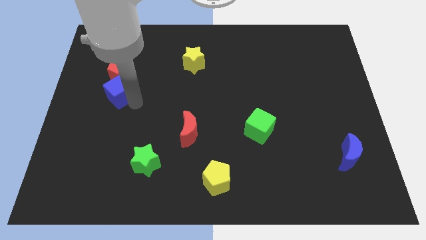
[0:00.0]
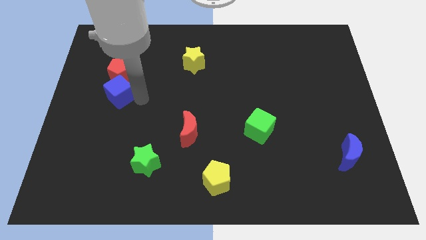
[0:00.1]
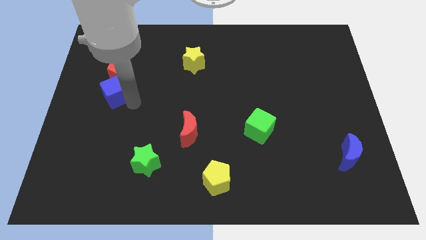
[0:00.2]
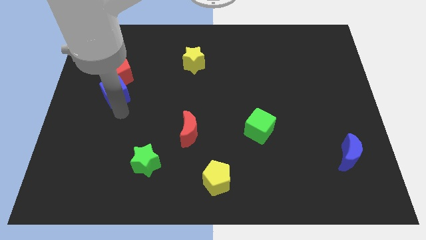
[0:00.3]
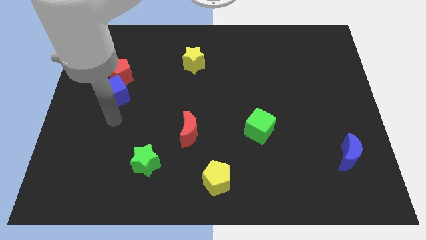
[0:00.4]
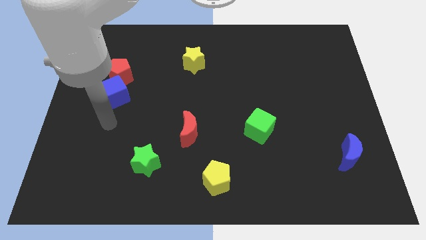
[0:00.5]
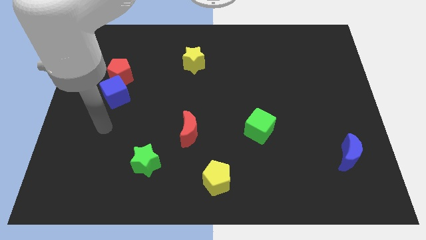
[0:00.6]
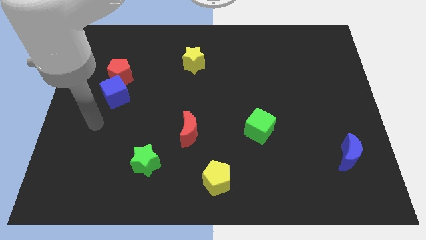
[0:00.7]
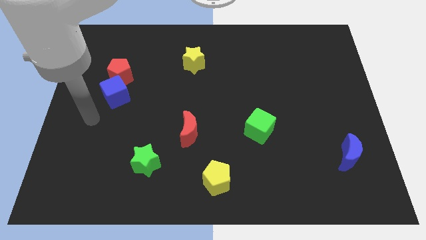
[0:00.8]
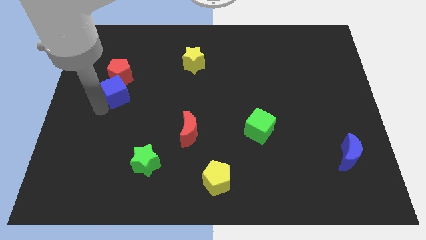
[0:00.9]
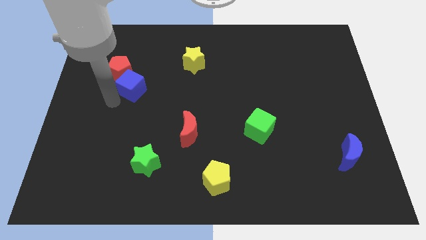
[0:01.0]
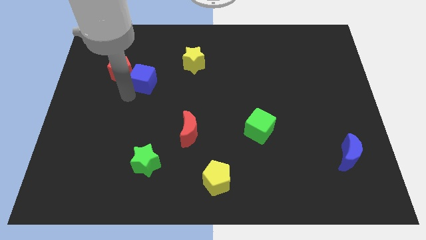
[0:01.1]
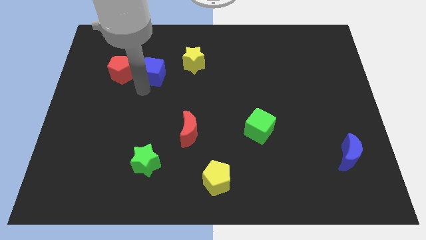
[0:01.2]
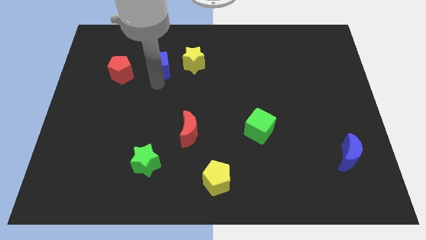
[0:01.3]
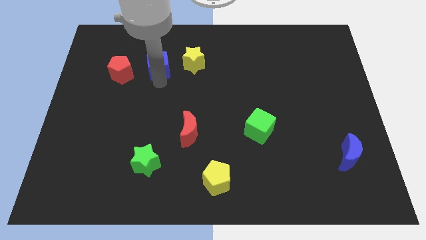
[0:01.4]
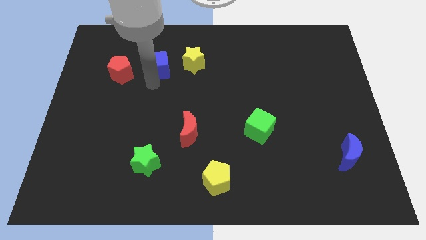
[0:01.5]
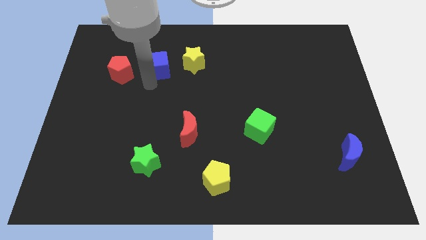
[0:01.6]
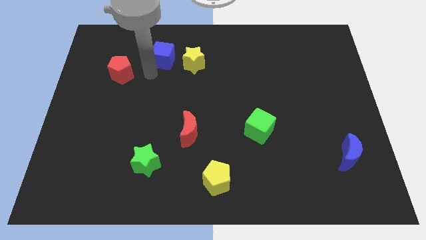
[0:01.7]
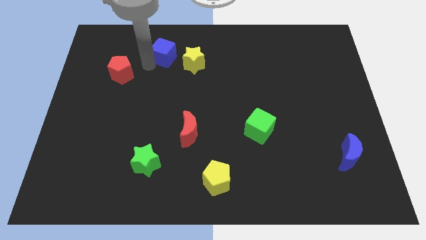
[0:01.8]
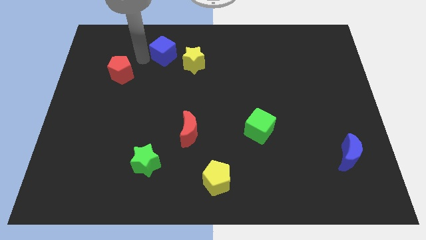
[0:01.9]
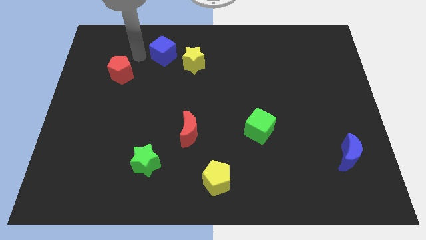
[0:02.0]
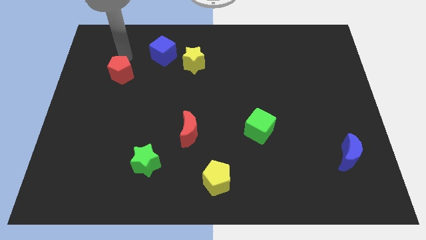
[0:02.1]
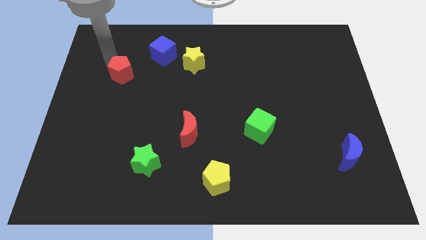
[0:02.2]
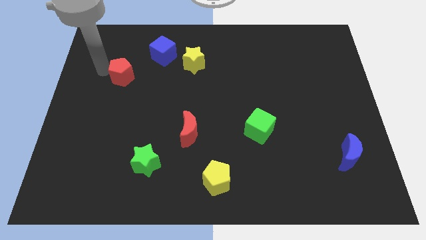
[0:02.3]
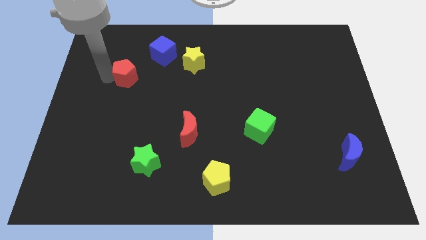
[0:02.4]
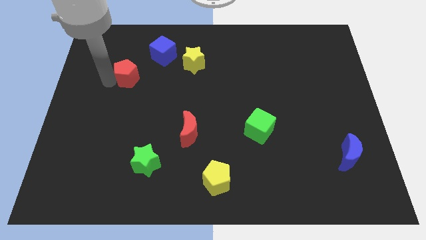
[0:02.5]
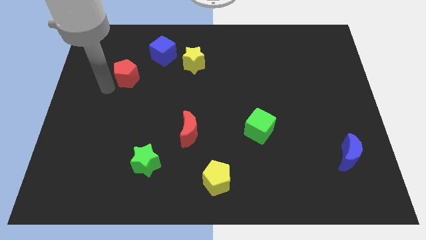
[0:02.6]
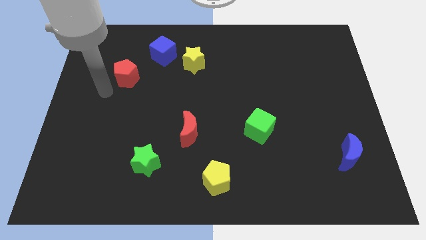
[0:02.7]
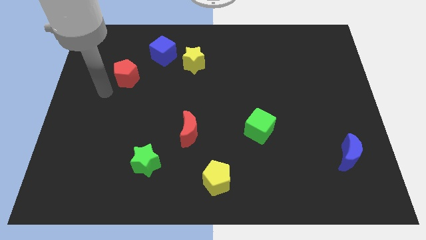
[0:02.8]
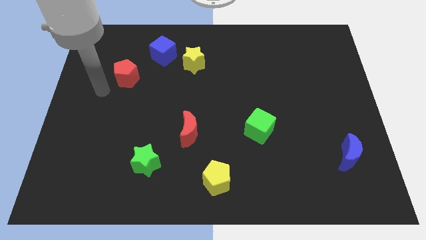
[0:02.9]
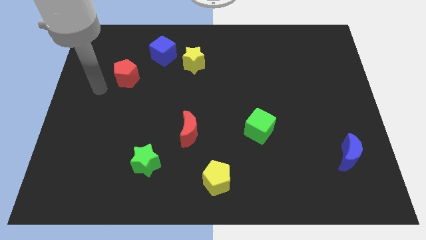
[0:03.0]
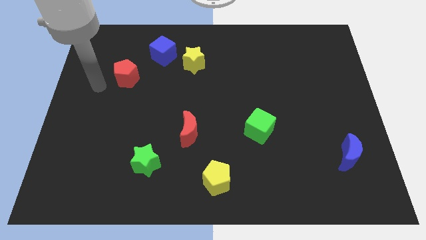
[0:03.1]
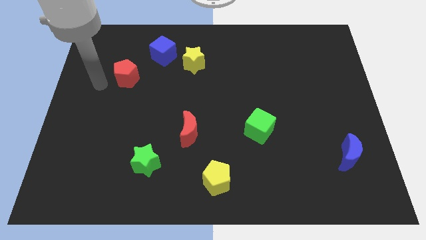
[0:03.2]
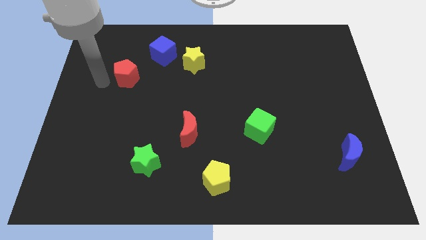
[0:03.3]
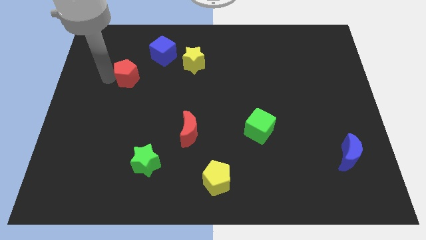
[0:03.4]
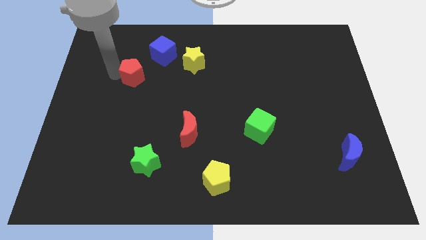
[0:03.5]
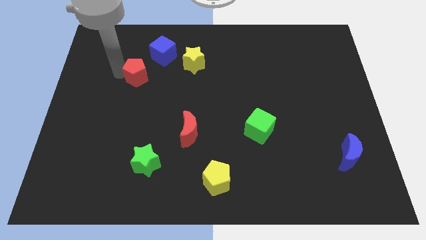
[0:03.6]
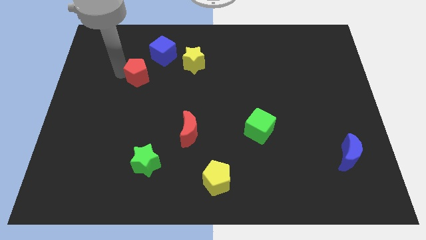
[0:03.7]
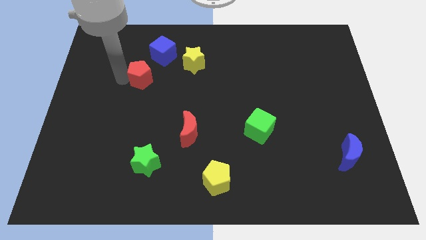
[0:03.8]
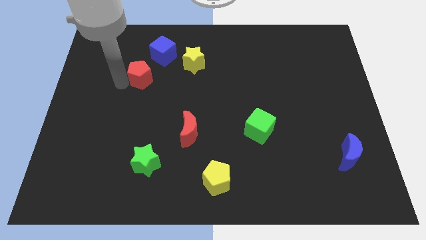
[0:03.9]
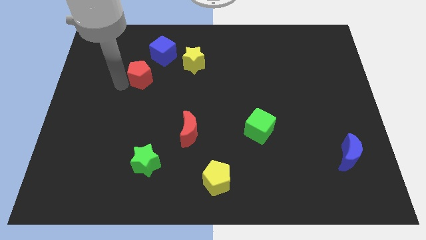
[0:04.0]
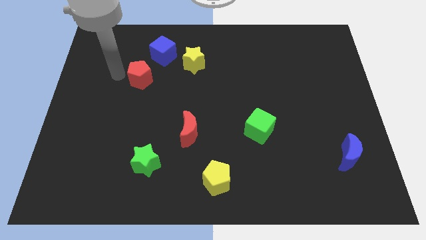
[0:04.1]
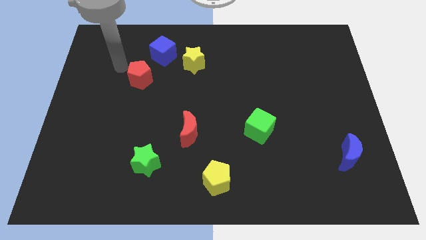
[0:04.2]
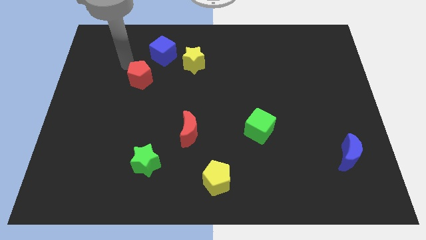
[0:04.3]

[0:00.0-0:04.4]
move the blue crescent to left side of yellow star

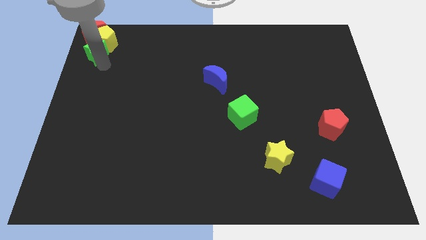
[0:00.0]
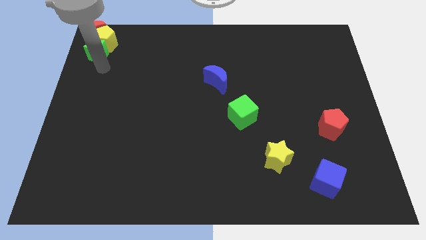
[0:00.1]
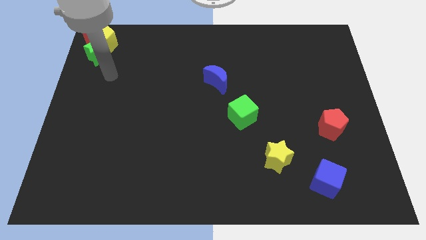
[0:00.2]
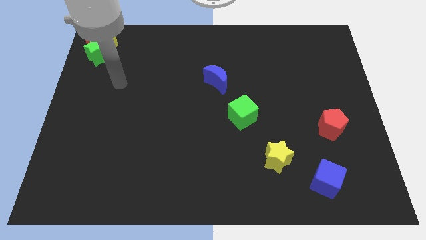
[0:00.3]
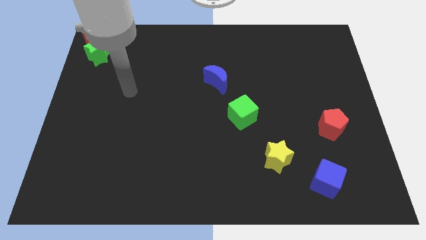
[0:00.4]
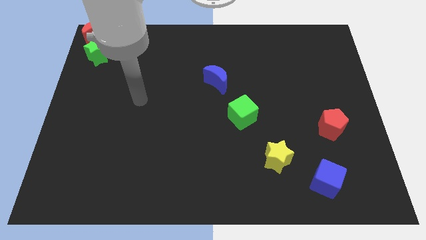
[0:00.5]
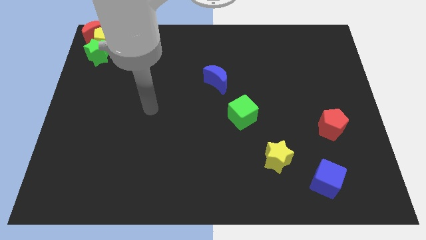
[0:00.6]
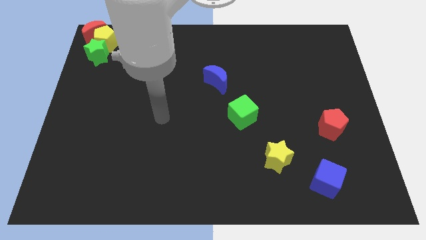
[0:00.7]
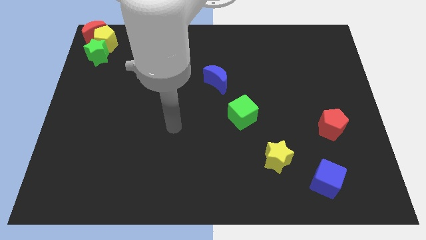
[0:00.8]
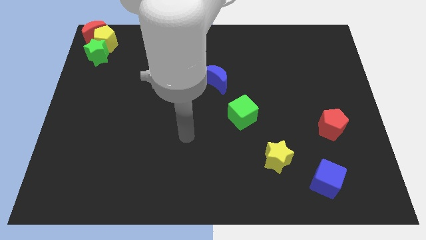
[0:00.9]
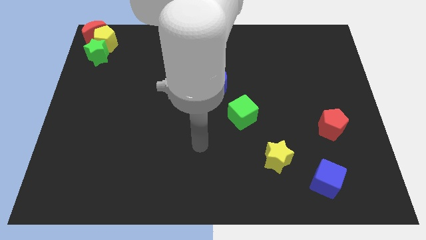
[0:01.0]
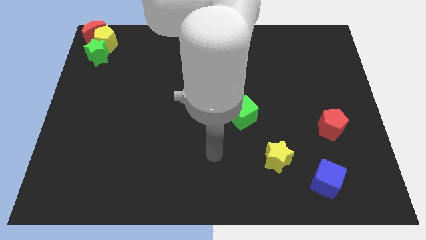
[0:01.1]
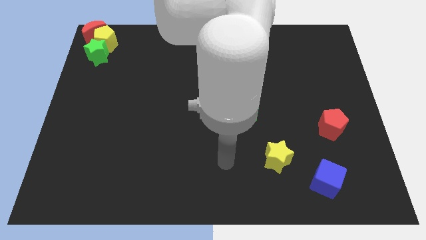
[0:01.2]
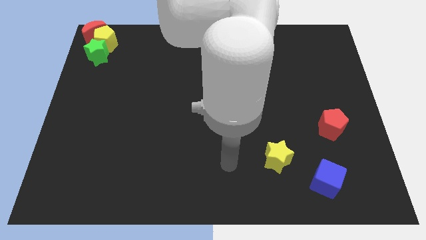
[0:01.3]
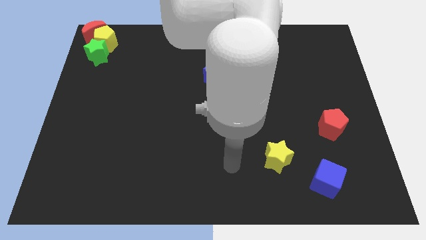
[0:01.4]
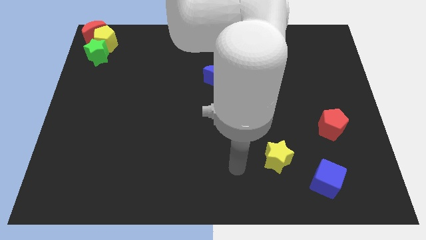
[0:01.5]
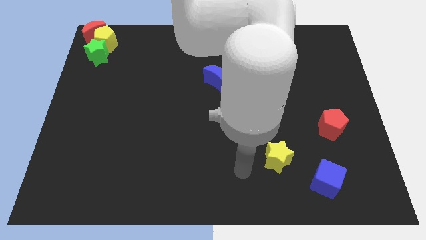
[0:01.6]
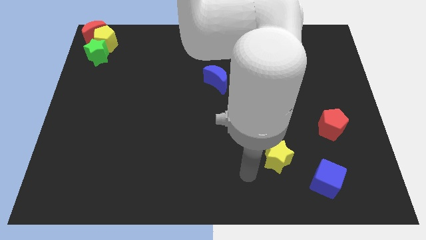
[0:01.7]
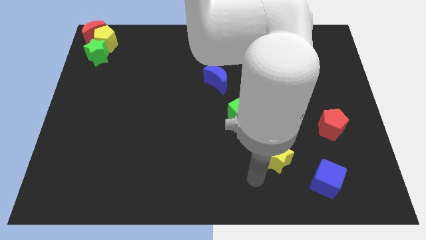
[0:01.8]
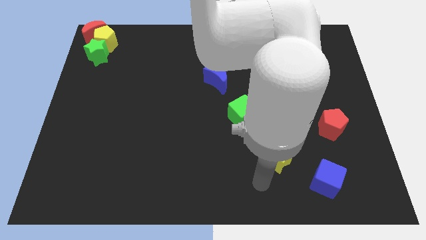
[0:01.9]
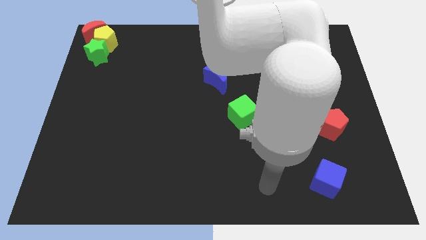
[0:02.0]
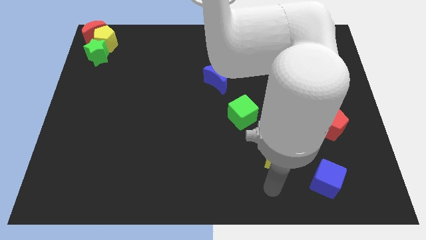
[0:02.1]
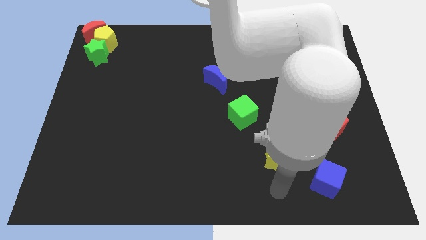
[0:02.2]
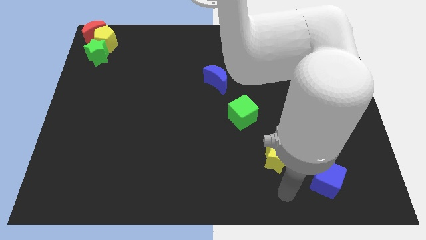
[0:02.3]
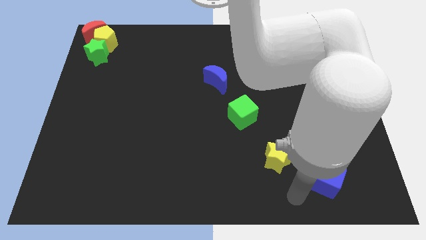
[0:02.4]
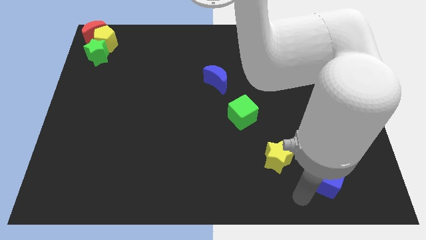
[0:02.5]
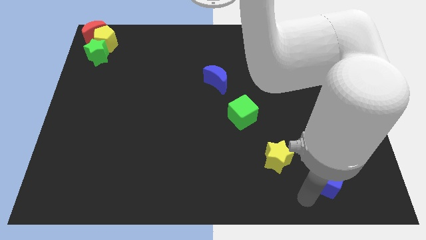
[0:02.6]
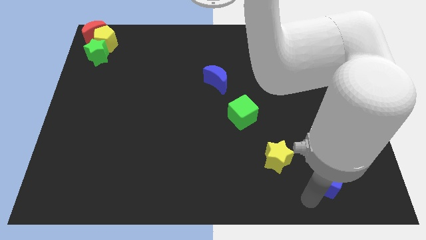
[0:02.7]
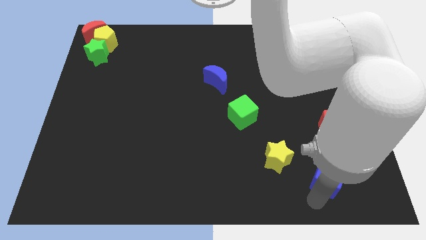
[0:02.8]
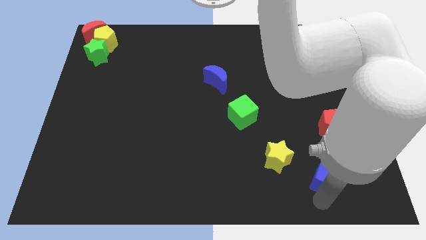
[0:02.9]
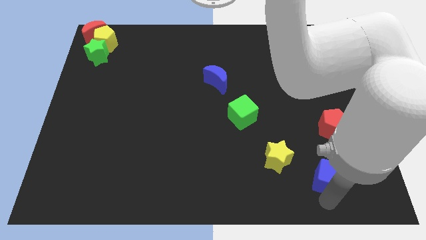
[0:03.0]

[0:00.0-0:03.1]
move your arm to the bottom of the blue cube

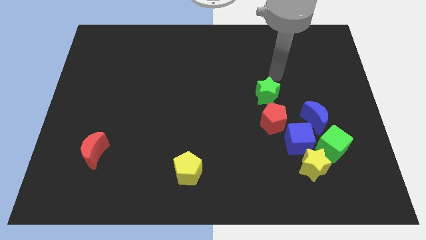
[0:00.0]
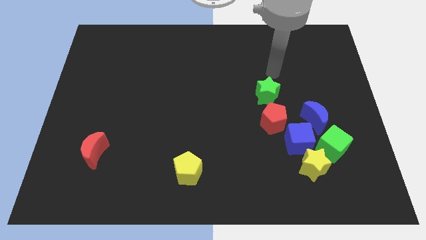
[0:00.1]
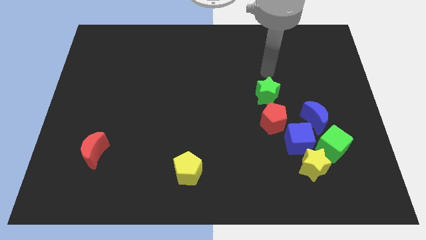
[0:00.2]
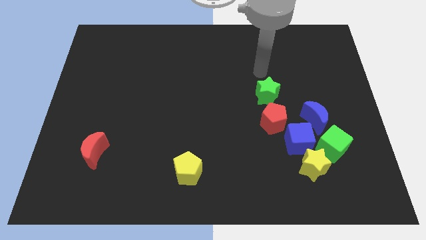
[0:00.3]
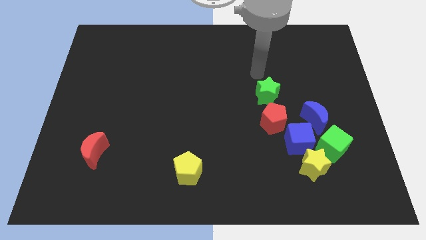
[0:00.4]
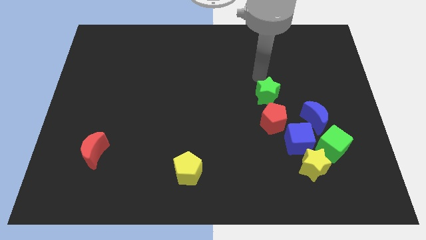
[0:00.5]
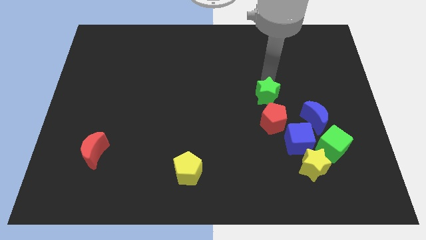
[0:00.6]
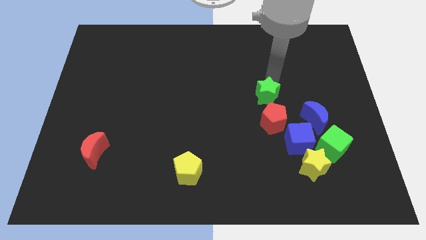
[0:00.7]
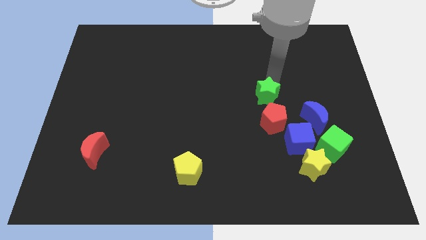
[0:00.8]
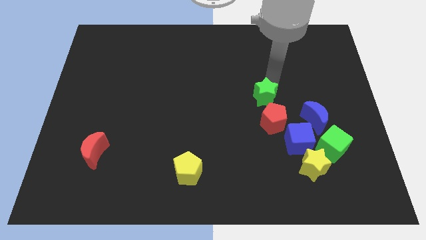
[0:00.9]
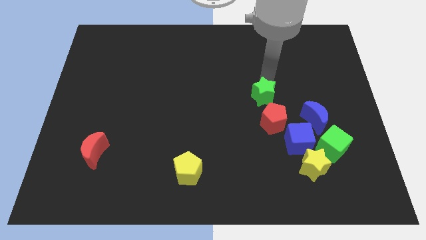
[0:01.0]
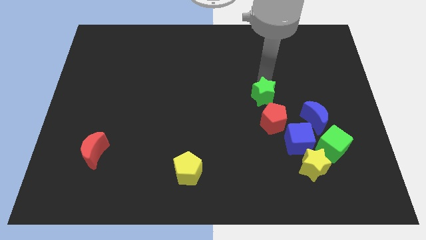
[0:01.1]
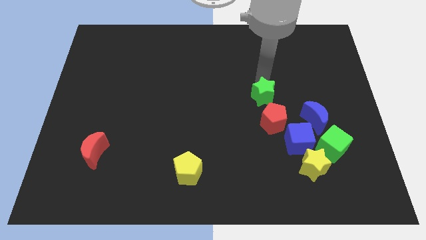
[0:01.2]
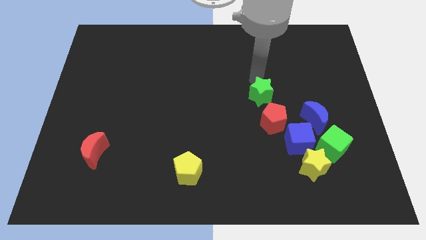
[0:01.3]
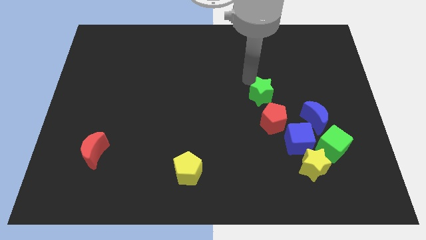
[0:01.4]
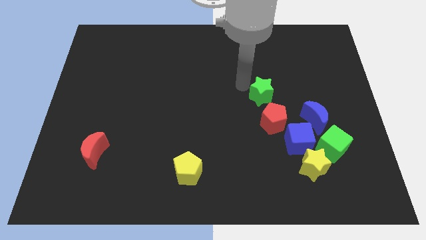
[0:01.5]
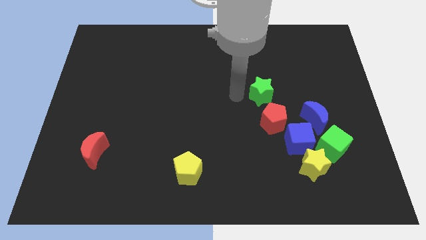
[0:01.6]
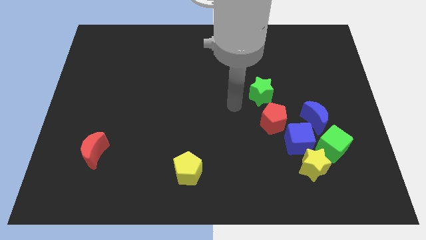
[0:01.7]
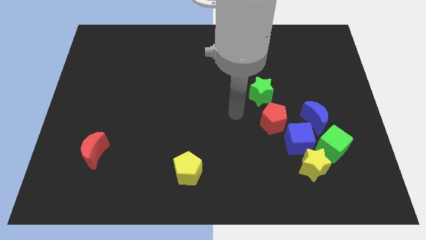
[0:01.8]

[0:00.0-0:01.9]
move the green star slightly to the left
